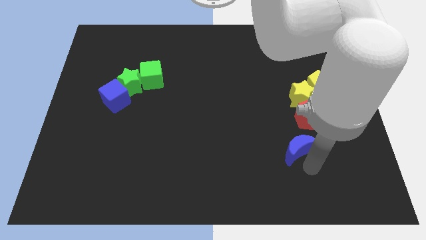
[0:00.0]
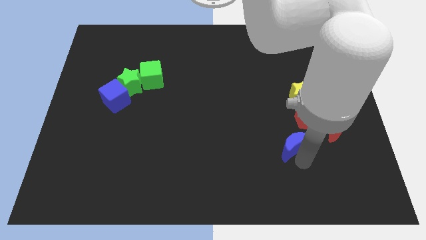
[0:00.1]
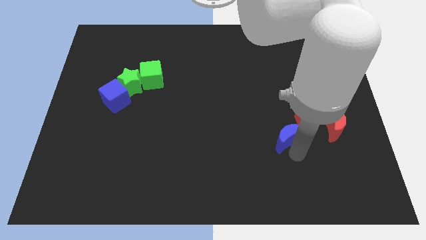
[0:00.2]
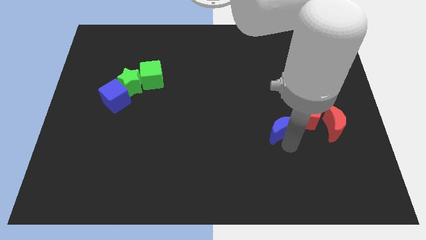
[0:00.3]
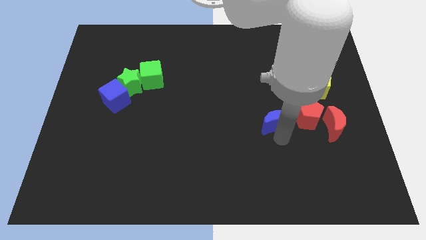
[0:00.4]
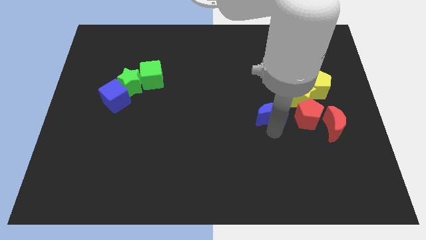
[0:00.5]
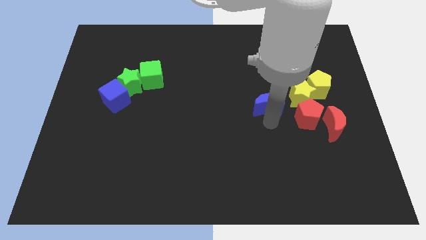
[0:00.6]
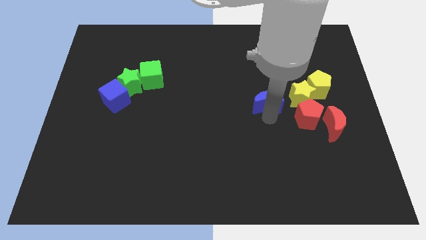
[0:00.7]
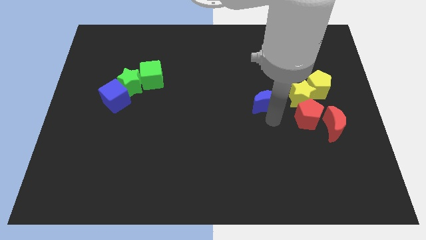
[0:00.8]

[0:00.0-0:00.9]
place the blue moon left to the yellow star

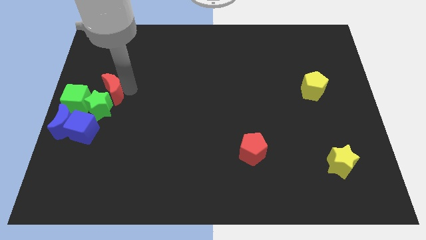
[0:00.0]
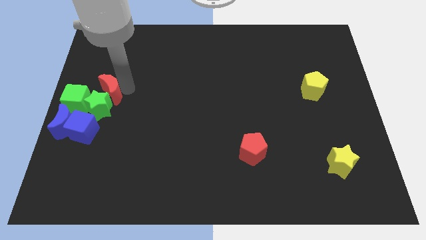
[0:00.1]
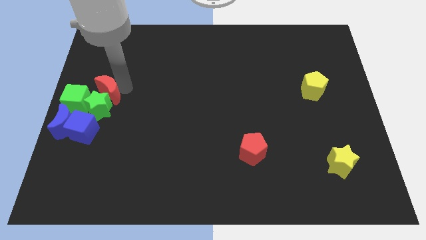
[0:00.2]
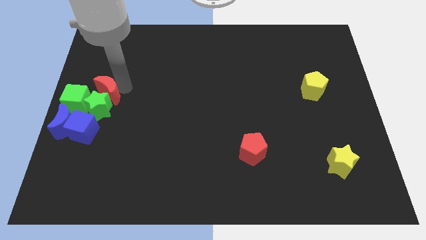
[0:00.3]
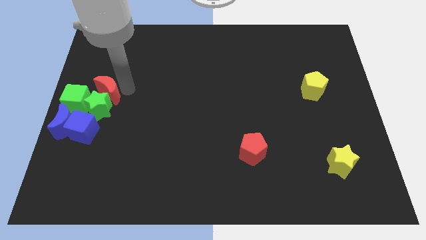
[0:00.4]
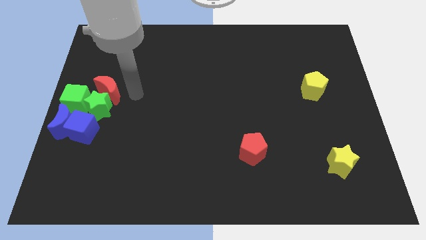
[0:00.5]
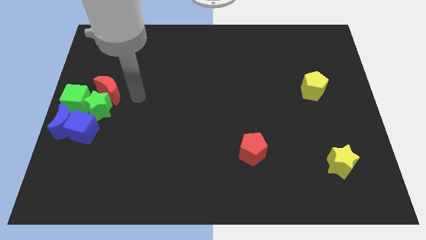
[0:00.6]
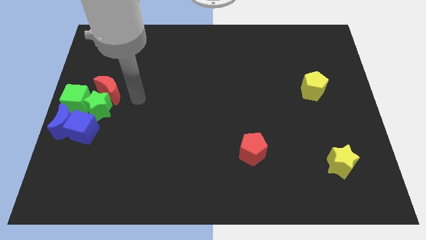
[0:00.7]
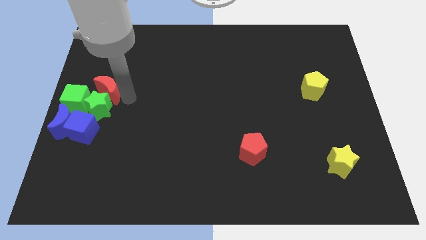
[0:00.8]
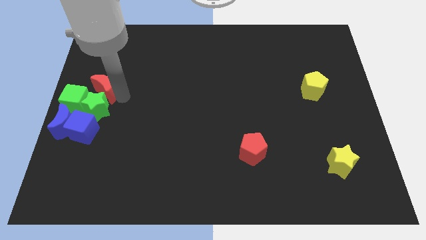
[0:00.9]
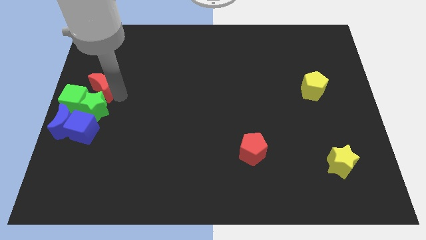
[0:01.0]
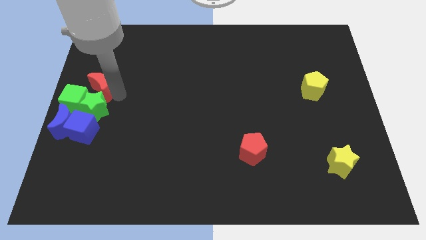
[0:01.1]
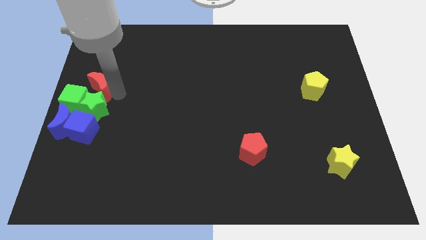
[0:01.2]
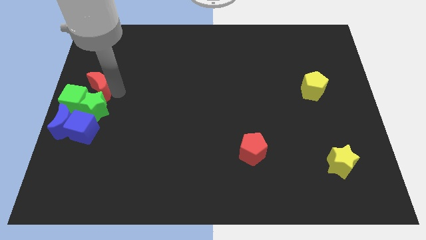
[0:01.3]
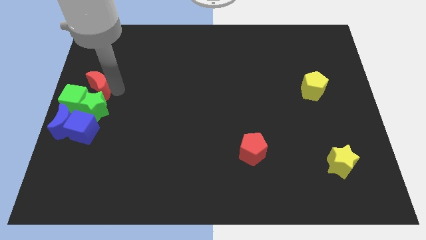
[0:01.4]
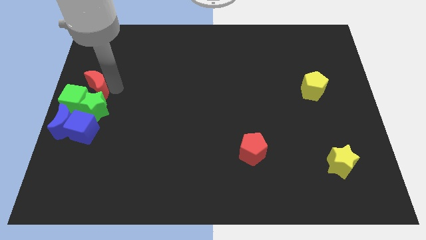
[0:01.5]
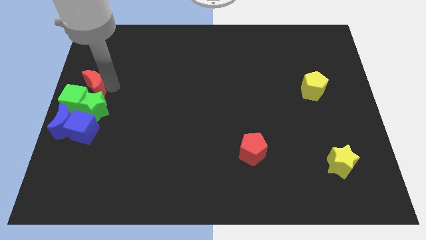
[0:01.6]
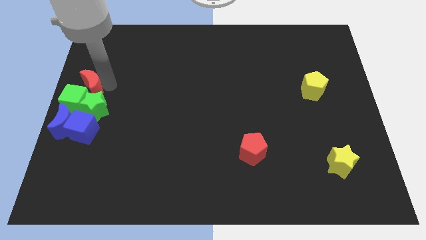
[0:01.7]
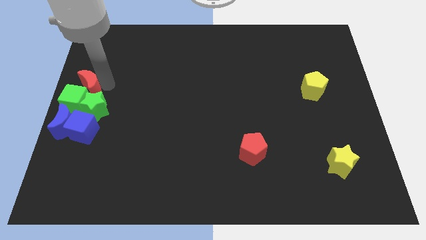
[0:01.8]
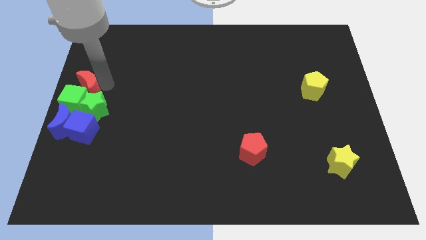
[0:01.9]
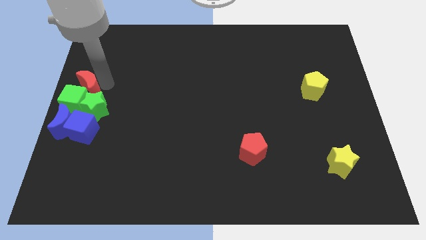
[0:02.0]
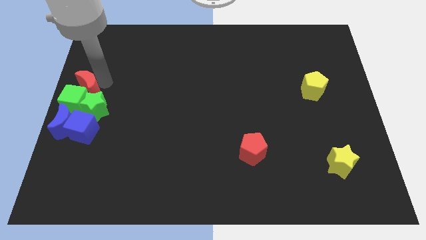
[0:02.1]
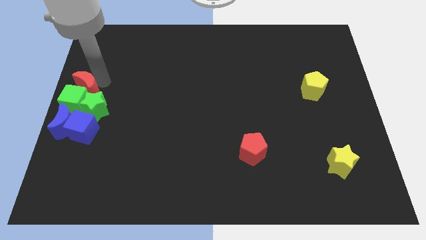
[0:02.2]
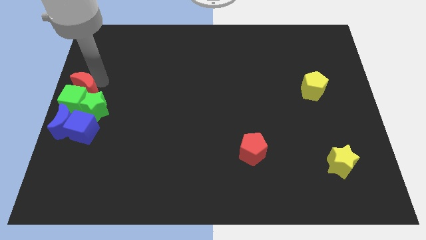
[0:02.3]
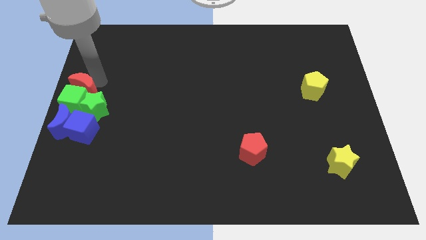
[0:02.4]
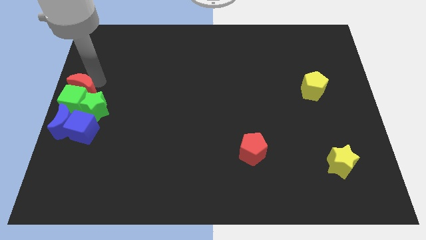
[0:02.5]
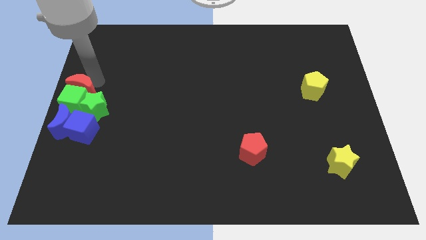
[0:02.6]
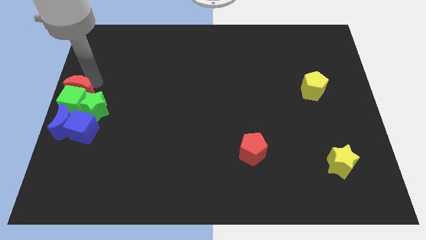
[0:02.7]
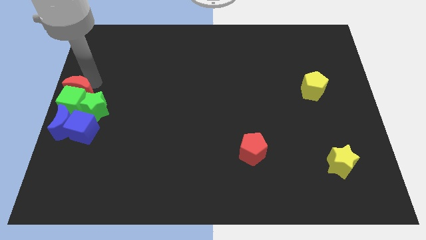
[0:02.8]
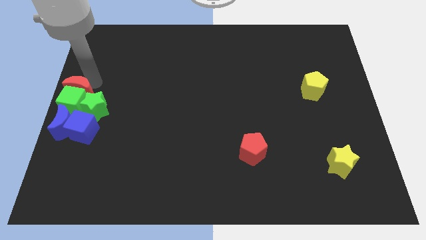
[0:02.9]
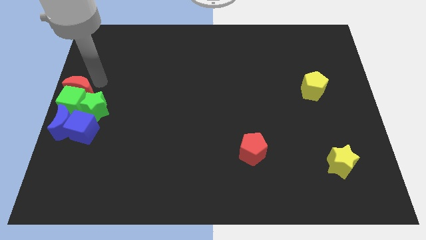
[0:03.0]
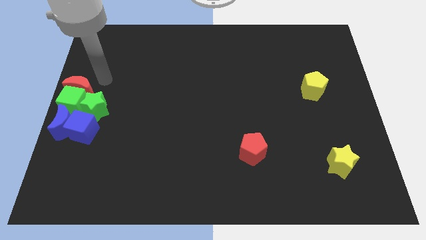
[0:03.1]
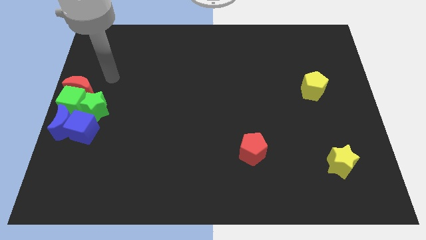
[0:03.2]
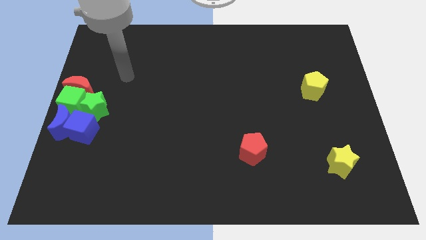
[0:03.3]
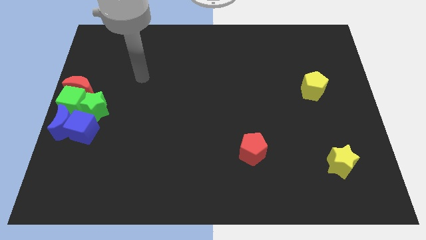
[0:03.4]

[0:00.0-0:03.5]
place the red half moon to the top of the green cube

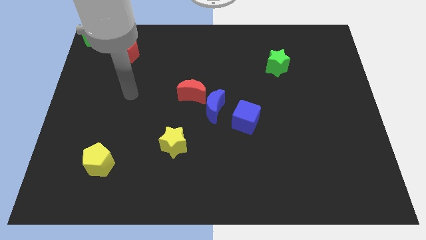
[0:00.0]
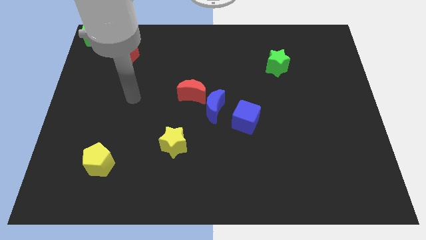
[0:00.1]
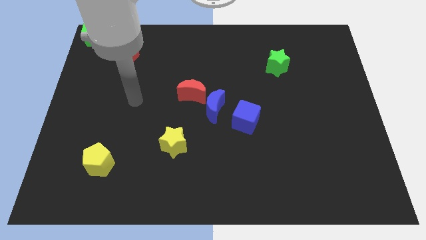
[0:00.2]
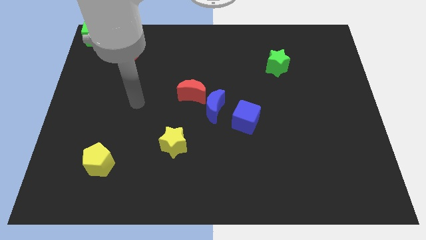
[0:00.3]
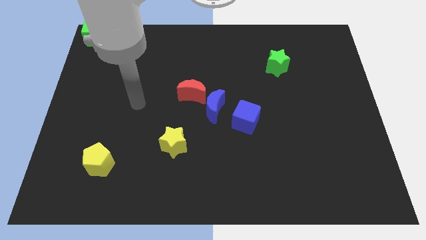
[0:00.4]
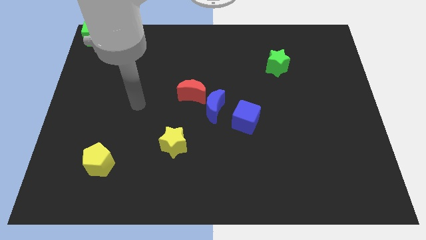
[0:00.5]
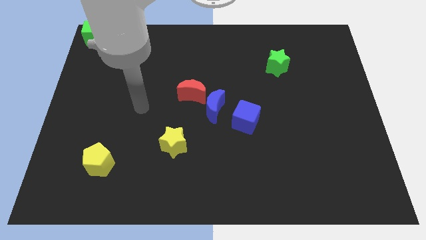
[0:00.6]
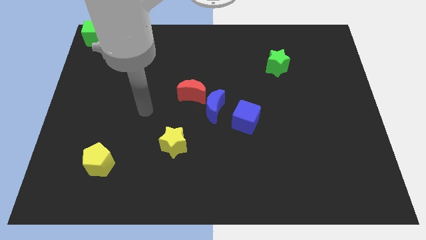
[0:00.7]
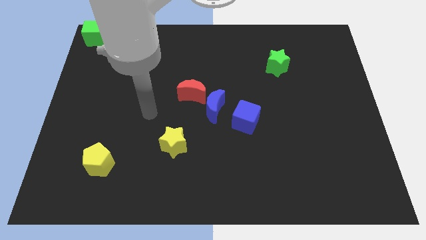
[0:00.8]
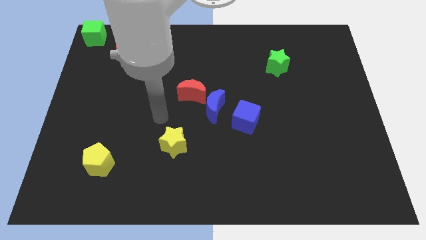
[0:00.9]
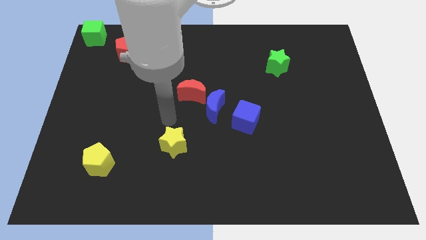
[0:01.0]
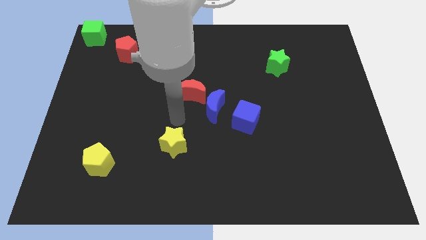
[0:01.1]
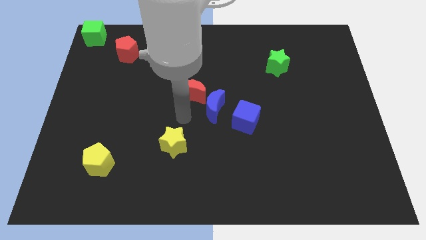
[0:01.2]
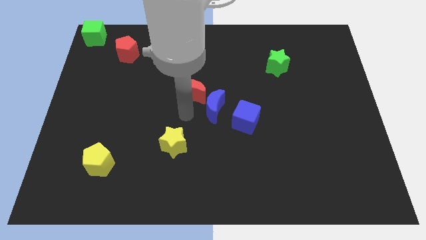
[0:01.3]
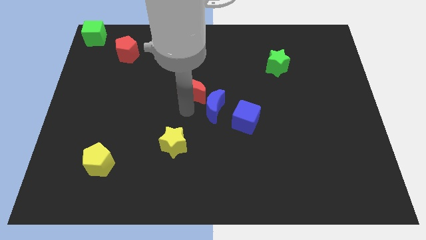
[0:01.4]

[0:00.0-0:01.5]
point your hand at the bottom side of the red crescent

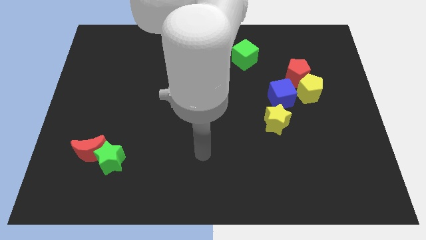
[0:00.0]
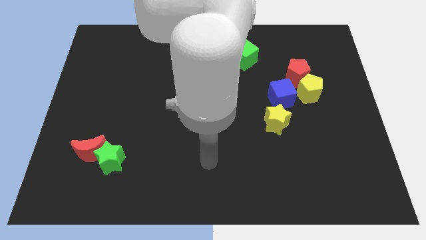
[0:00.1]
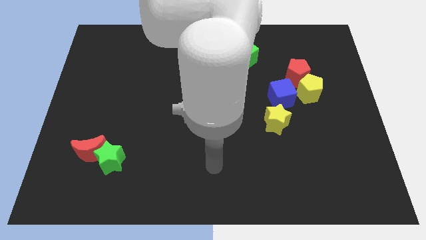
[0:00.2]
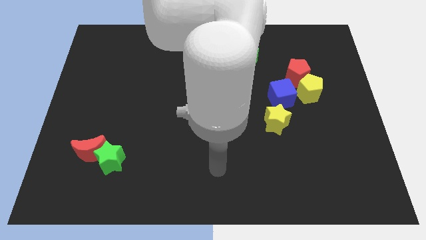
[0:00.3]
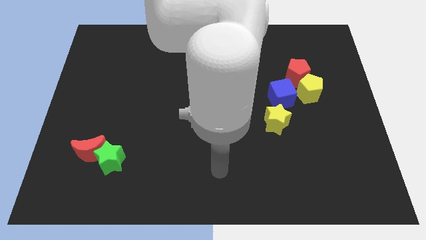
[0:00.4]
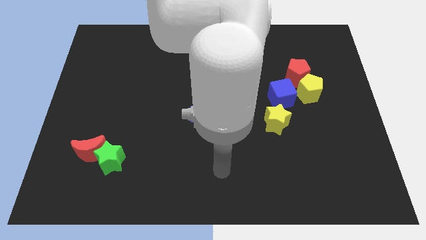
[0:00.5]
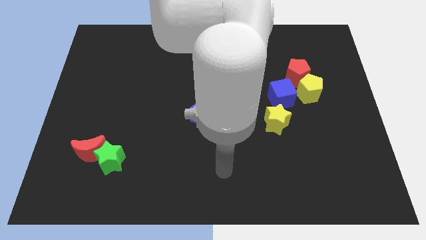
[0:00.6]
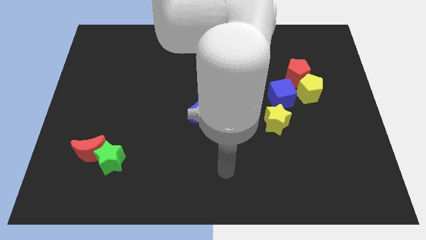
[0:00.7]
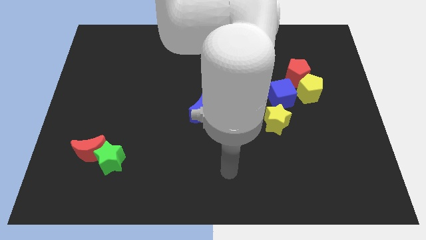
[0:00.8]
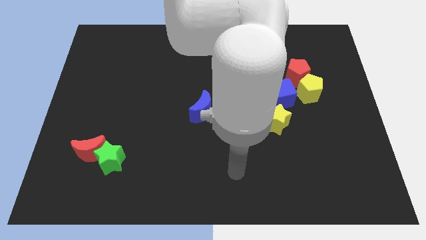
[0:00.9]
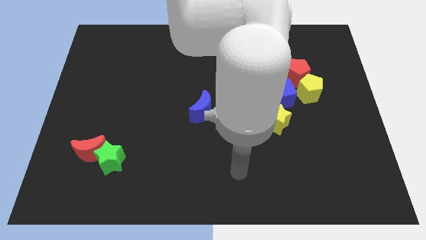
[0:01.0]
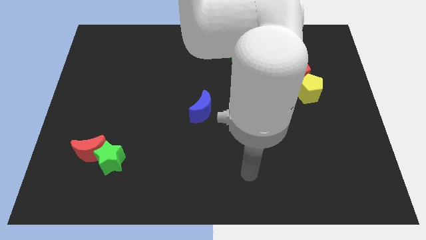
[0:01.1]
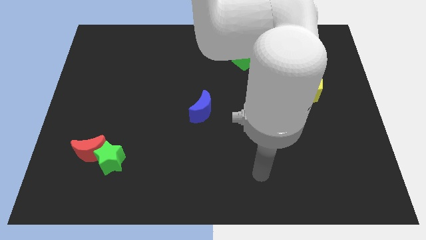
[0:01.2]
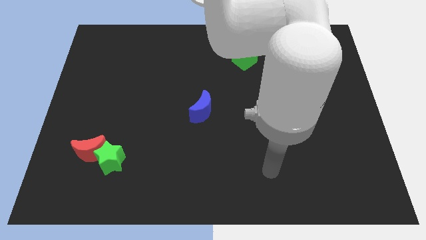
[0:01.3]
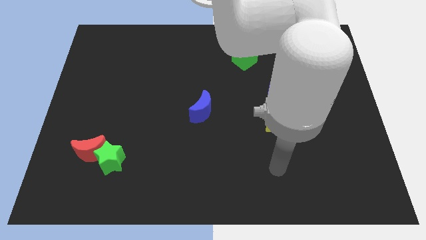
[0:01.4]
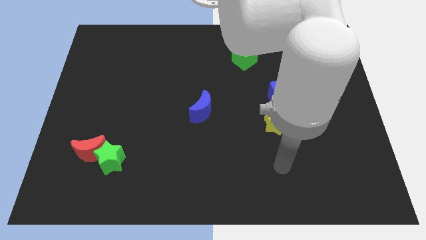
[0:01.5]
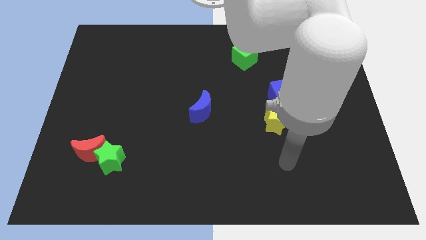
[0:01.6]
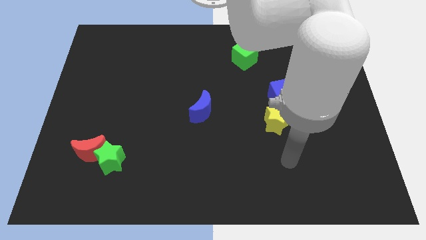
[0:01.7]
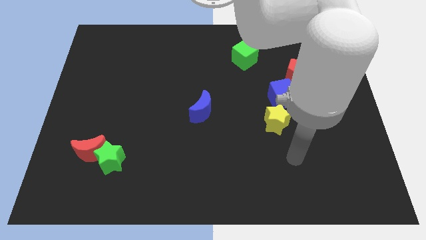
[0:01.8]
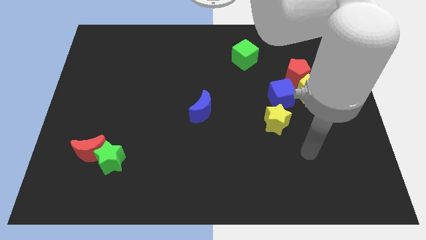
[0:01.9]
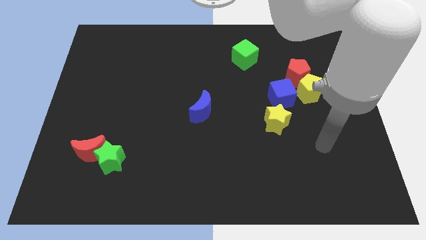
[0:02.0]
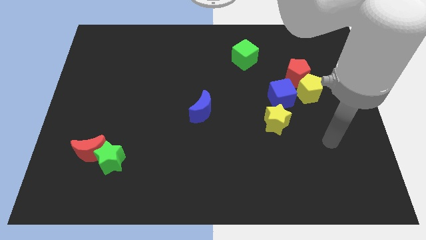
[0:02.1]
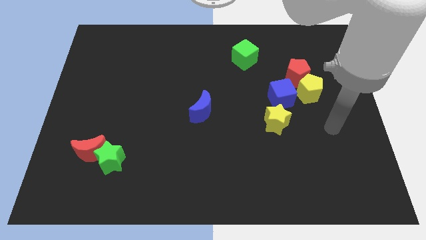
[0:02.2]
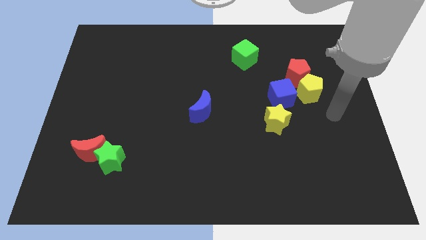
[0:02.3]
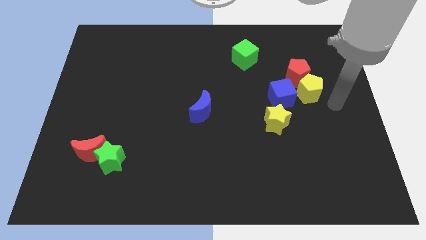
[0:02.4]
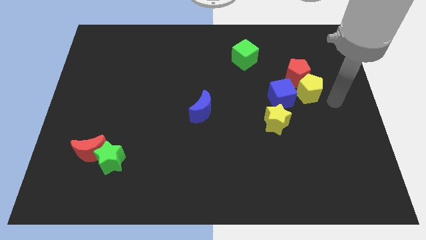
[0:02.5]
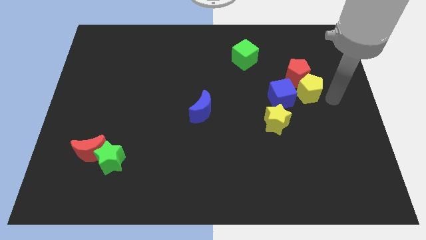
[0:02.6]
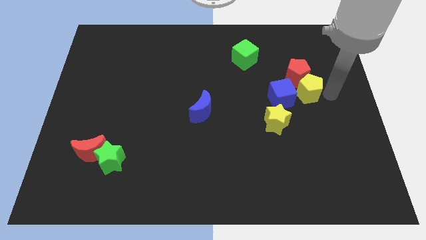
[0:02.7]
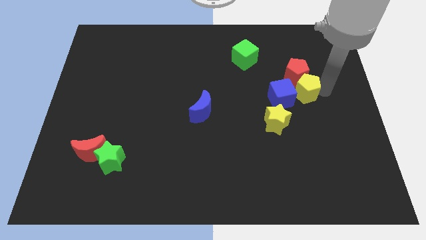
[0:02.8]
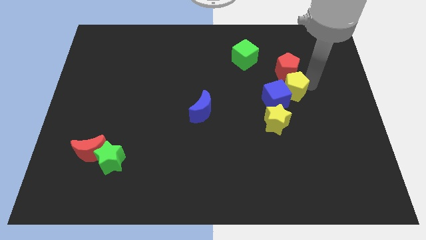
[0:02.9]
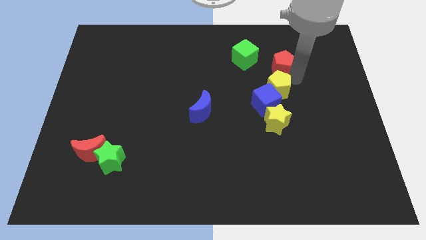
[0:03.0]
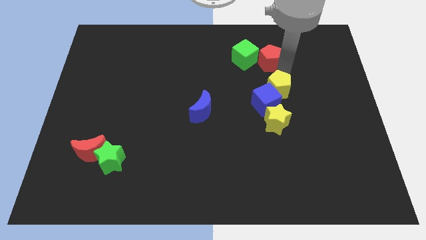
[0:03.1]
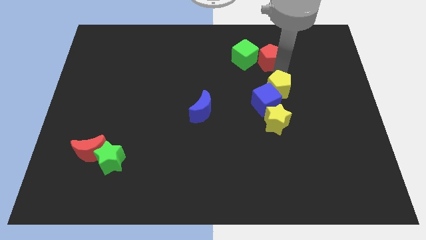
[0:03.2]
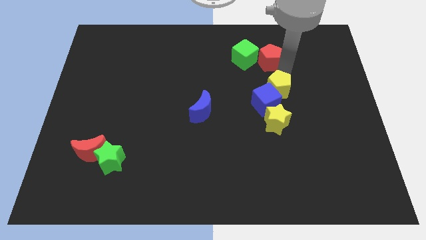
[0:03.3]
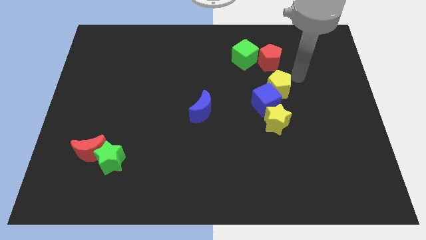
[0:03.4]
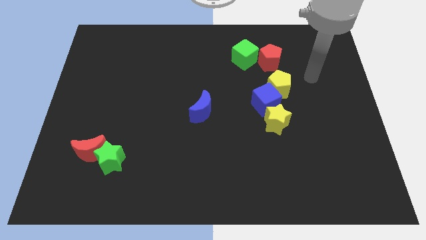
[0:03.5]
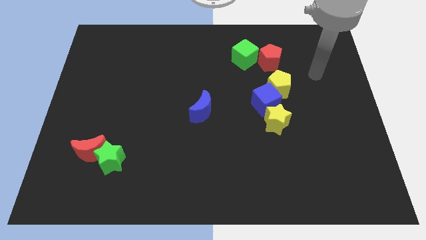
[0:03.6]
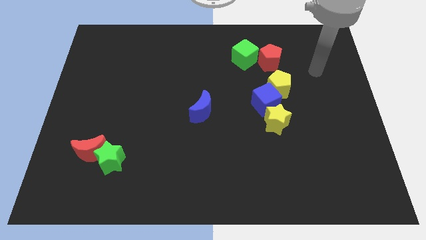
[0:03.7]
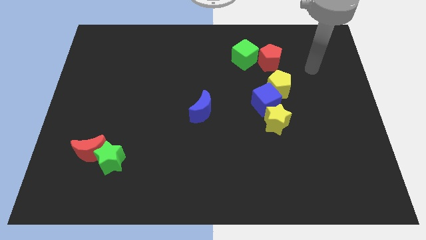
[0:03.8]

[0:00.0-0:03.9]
push red pentagon near to green cube
